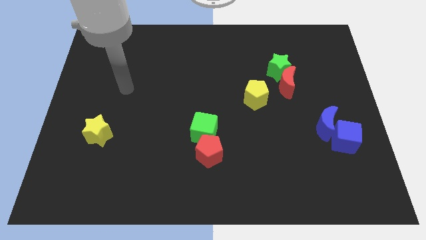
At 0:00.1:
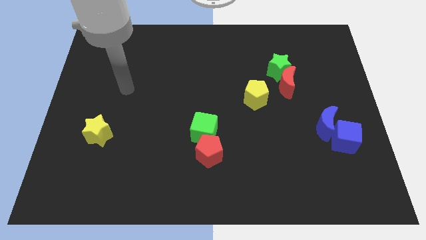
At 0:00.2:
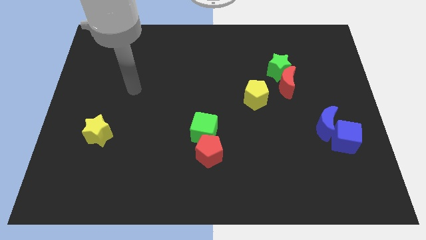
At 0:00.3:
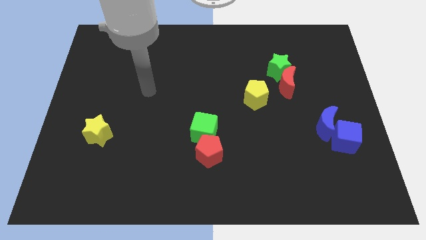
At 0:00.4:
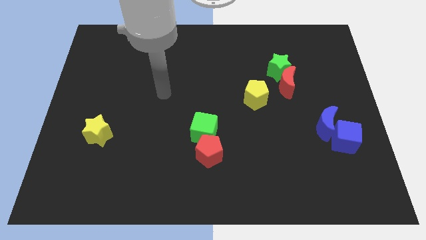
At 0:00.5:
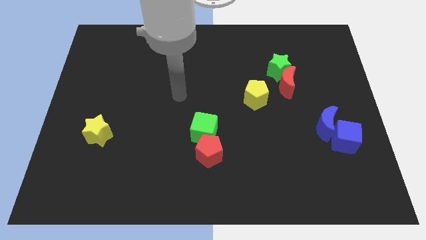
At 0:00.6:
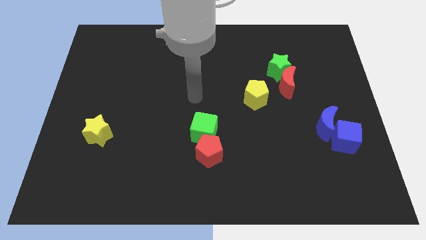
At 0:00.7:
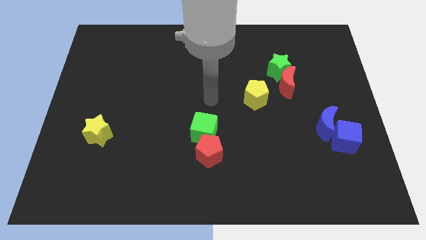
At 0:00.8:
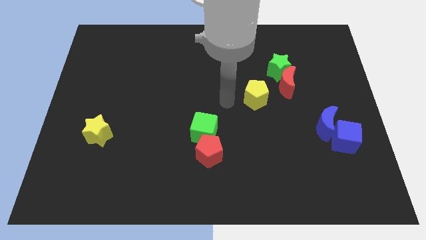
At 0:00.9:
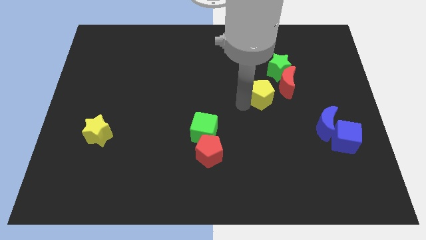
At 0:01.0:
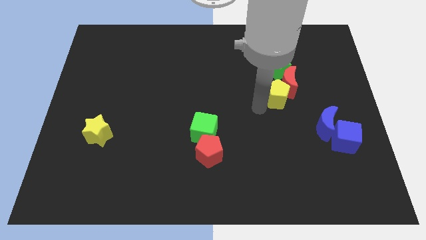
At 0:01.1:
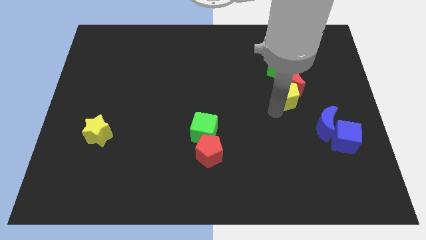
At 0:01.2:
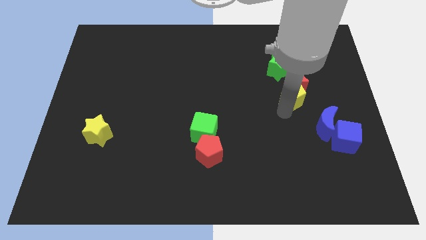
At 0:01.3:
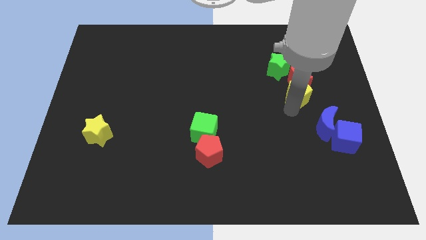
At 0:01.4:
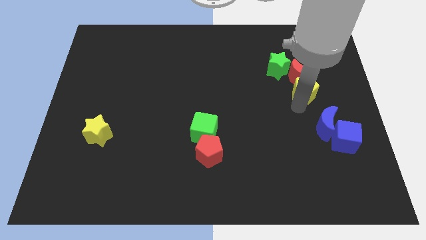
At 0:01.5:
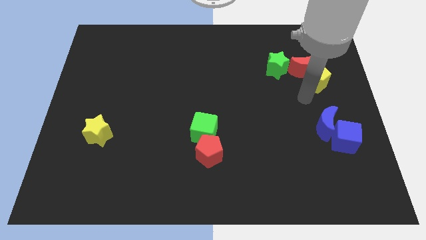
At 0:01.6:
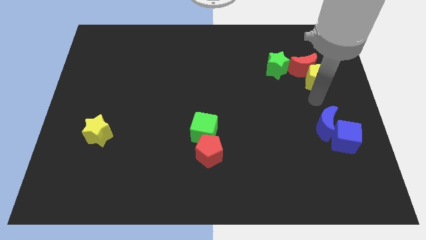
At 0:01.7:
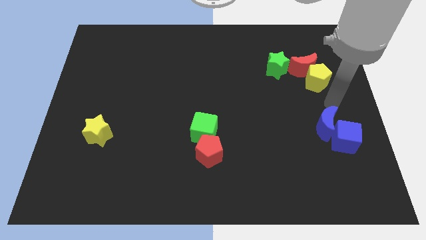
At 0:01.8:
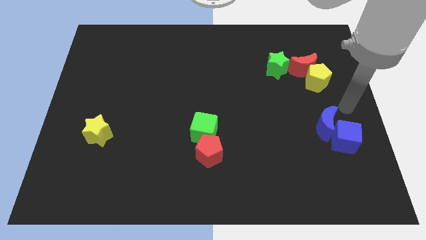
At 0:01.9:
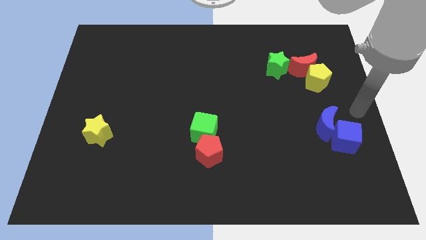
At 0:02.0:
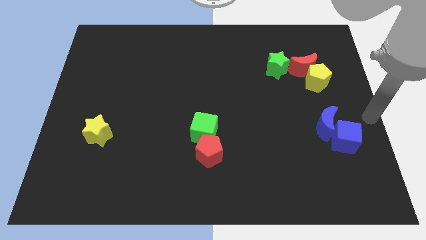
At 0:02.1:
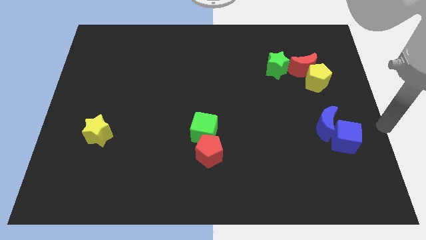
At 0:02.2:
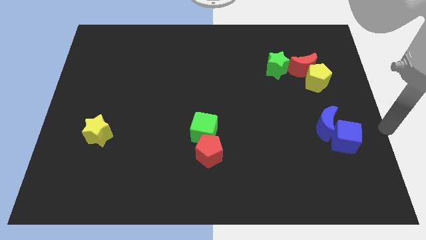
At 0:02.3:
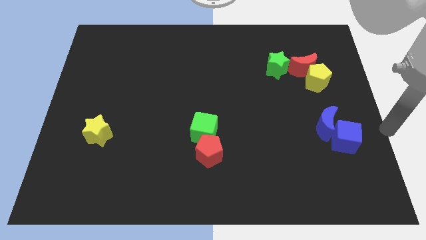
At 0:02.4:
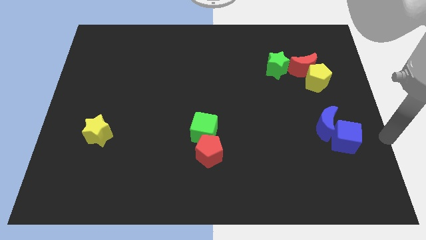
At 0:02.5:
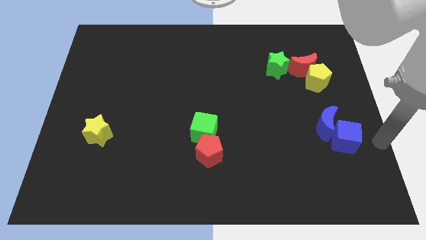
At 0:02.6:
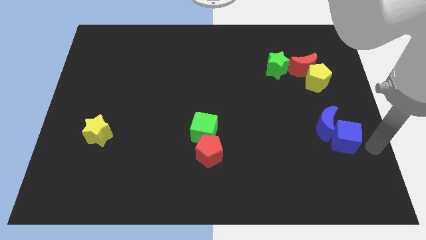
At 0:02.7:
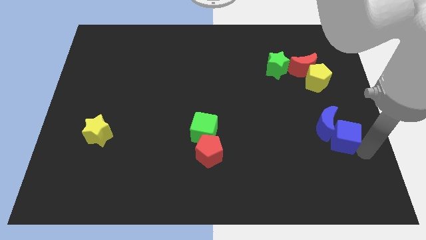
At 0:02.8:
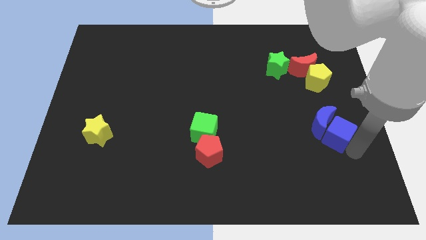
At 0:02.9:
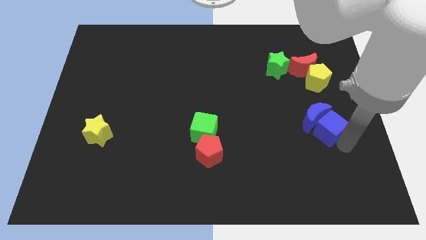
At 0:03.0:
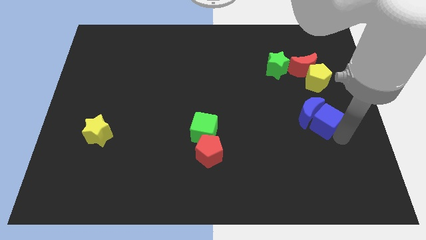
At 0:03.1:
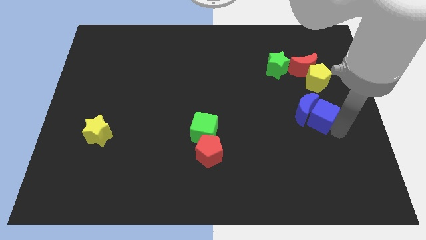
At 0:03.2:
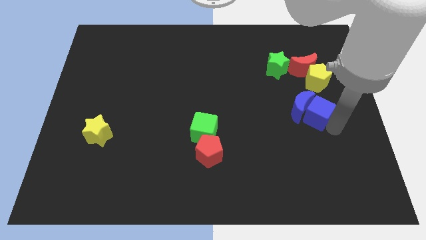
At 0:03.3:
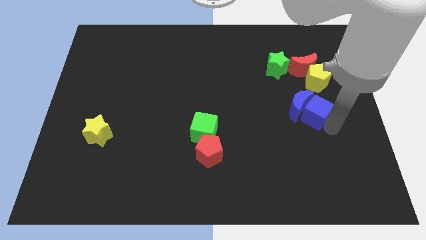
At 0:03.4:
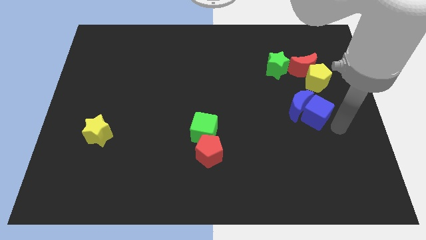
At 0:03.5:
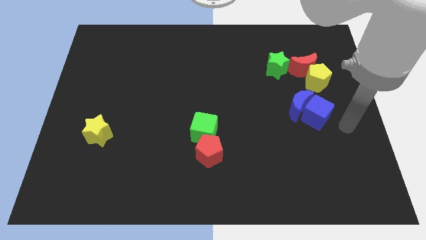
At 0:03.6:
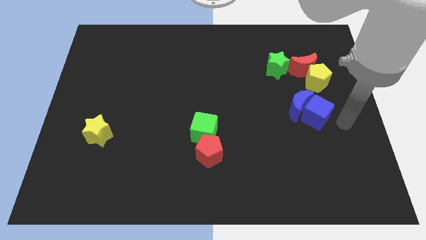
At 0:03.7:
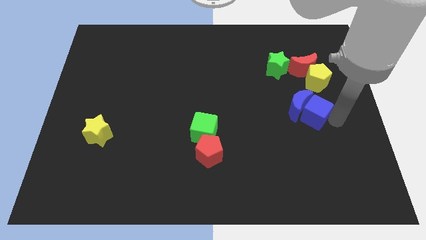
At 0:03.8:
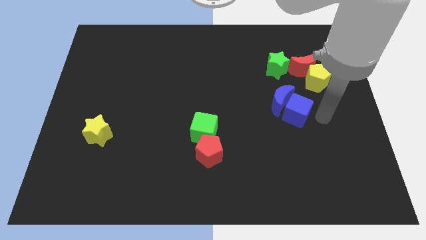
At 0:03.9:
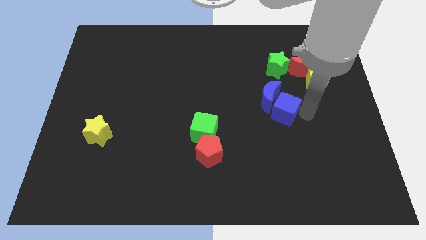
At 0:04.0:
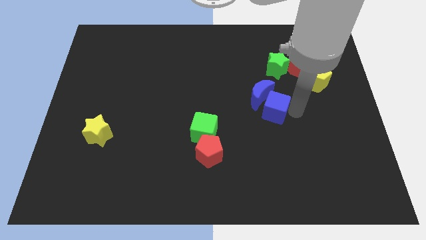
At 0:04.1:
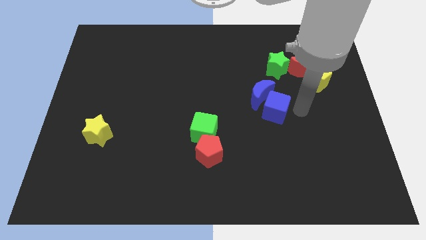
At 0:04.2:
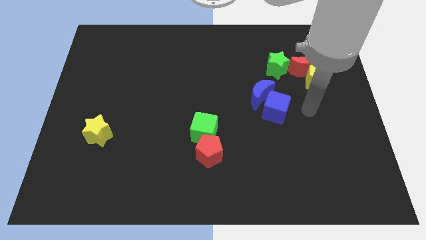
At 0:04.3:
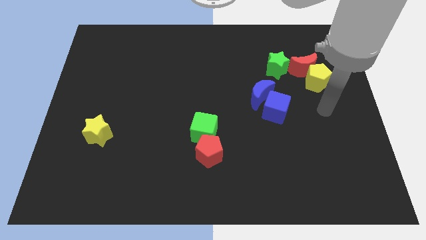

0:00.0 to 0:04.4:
push the blue cube and blue moon towards the center of the board

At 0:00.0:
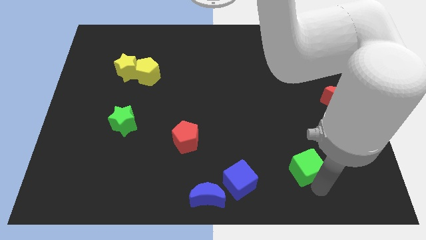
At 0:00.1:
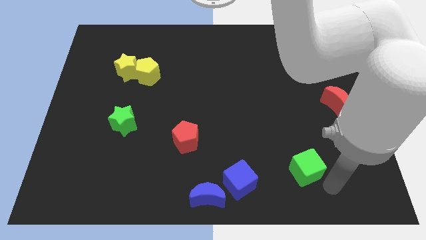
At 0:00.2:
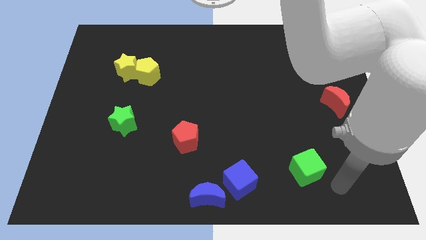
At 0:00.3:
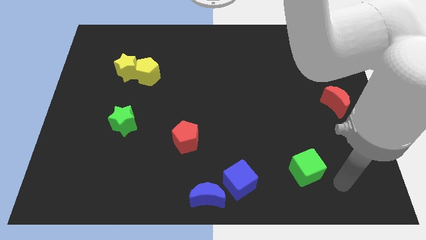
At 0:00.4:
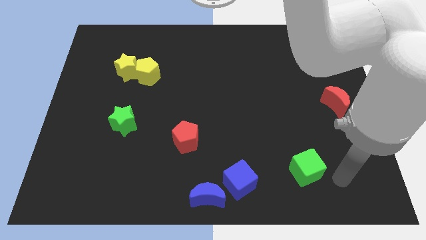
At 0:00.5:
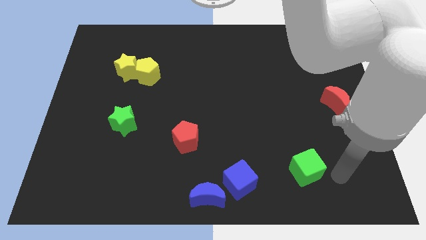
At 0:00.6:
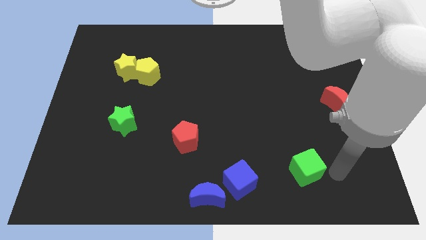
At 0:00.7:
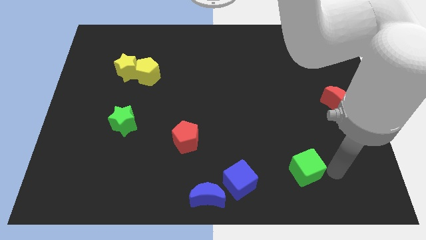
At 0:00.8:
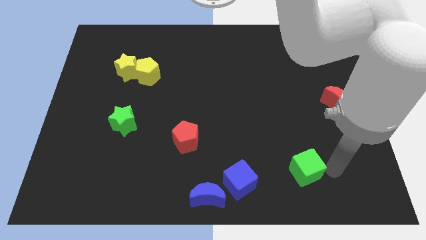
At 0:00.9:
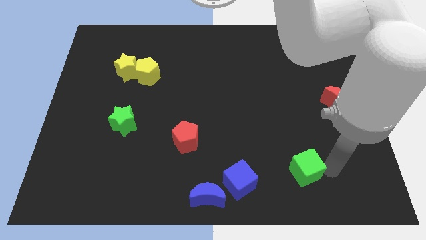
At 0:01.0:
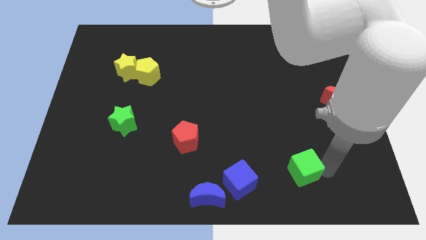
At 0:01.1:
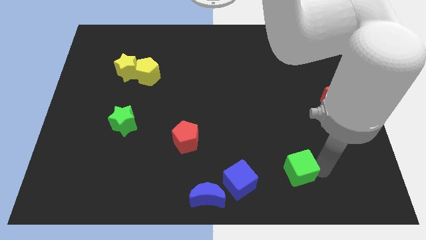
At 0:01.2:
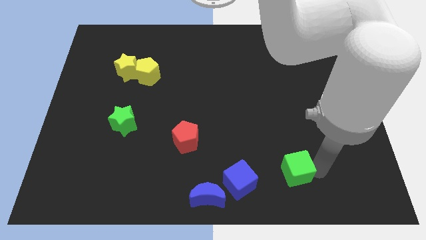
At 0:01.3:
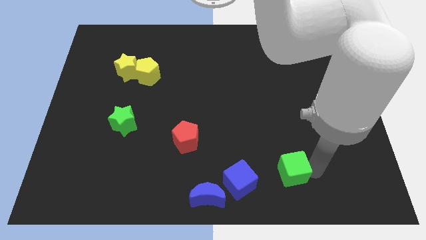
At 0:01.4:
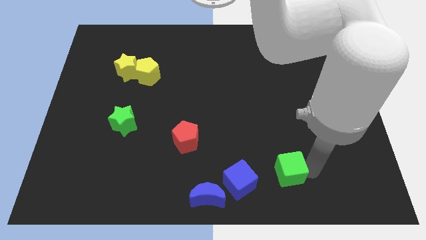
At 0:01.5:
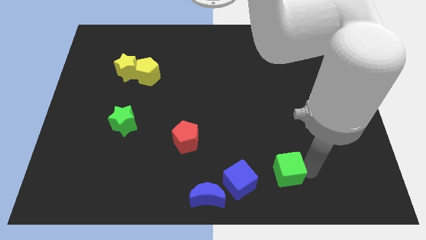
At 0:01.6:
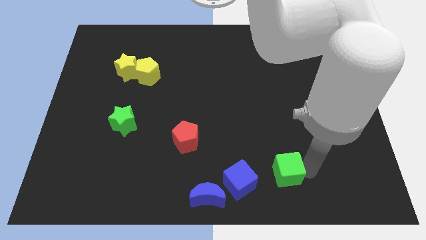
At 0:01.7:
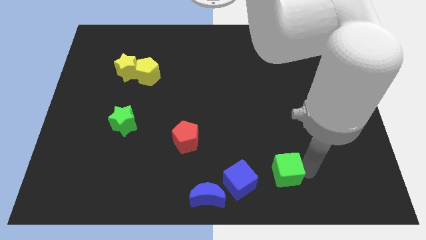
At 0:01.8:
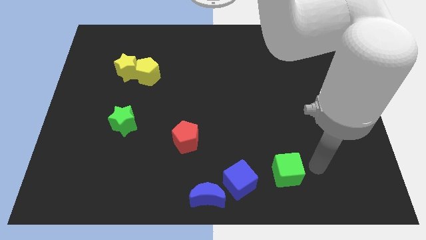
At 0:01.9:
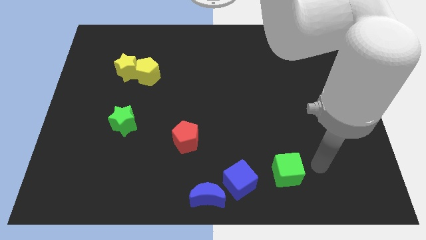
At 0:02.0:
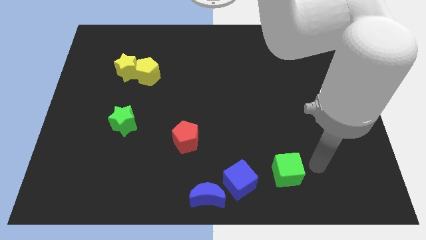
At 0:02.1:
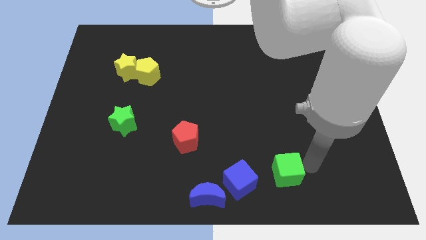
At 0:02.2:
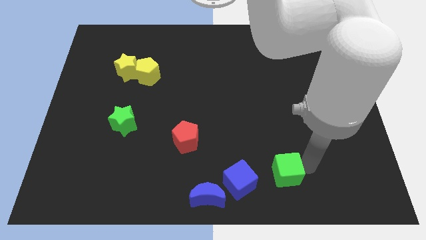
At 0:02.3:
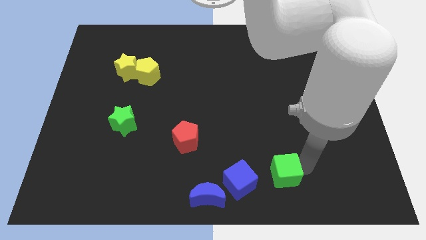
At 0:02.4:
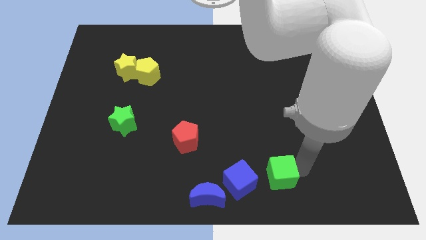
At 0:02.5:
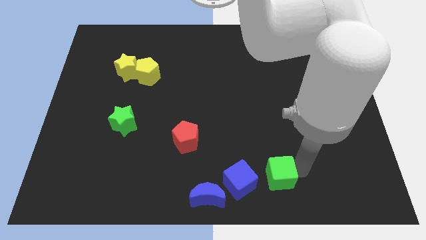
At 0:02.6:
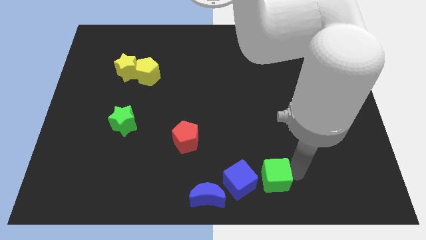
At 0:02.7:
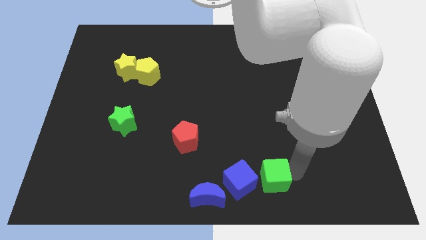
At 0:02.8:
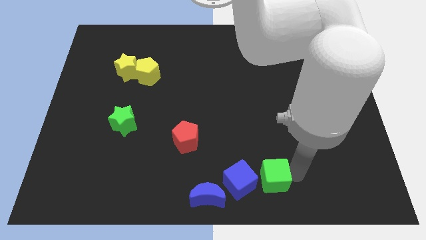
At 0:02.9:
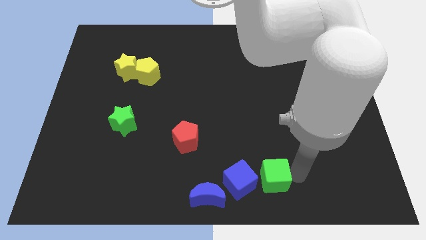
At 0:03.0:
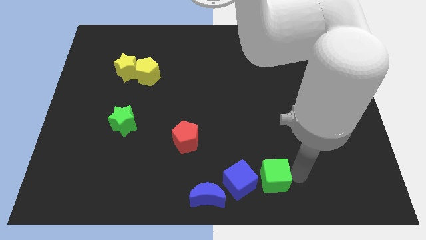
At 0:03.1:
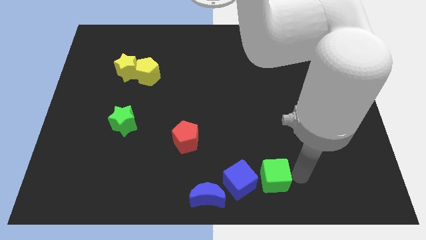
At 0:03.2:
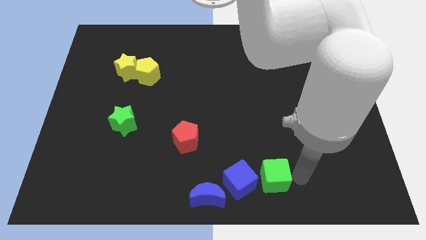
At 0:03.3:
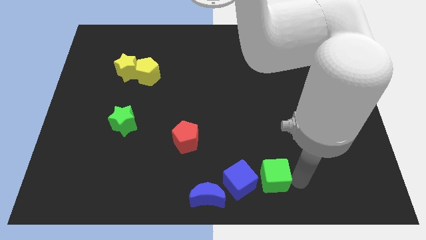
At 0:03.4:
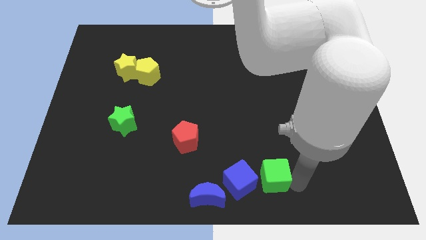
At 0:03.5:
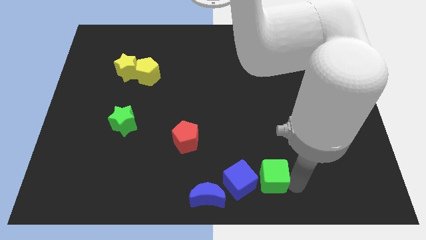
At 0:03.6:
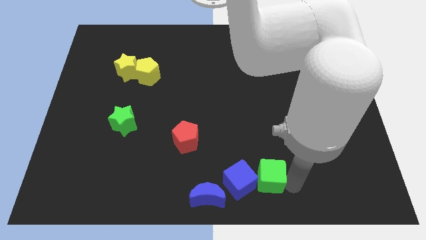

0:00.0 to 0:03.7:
place the green cube to the right of the blue cube

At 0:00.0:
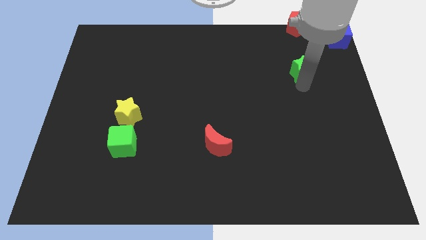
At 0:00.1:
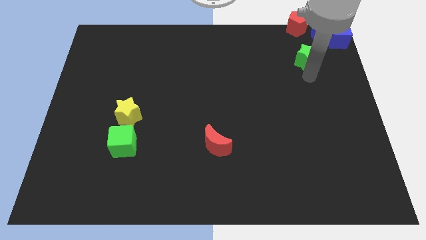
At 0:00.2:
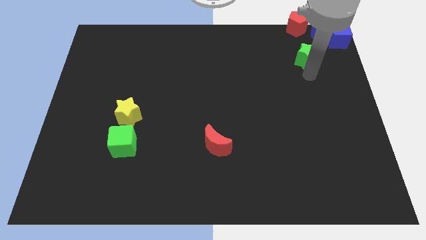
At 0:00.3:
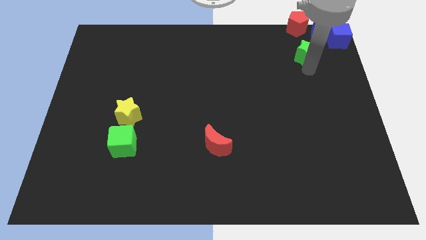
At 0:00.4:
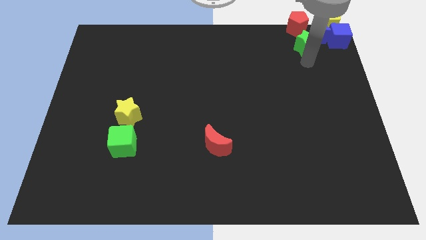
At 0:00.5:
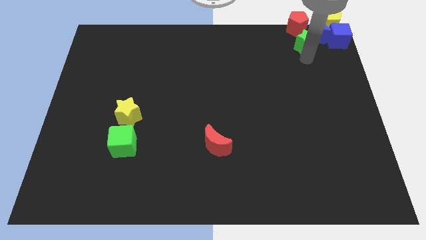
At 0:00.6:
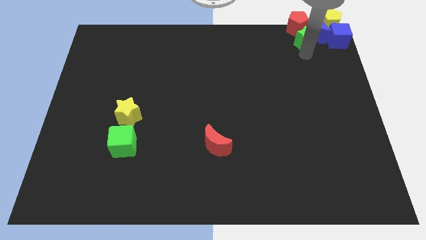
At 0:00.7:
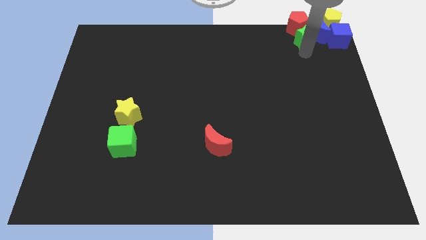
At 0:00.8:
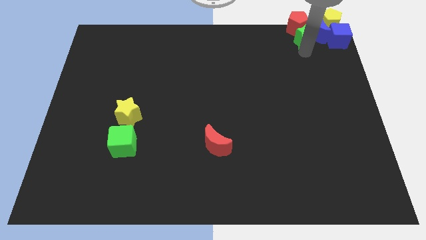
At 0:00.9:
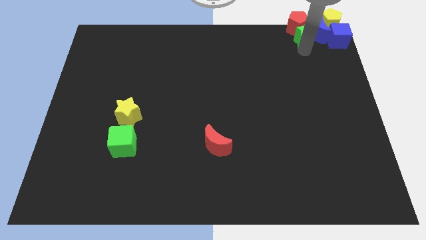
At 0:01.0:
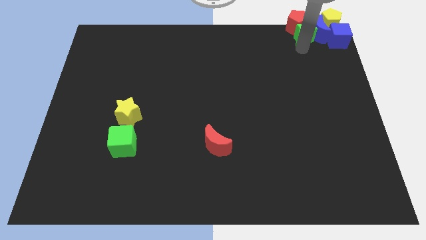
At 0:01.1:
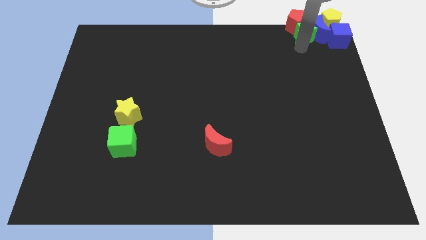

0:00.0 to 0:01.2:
move the green star below the red pentagon
